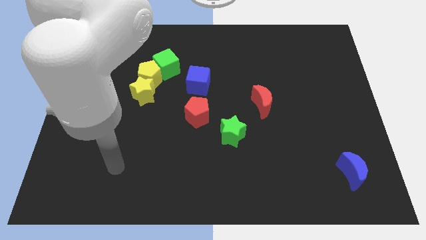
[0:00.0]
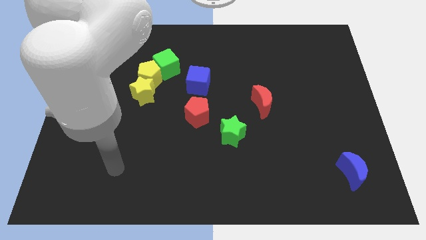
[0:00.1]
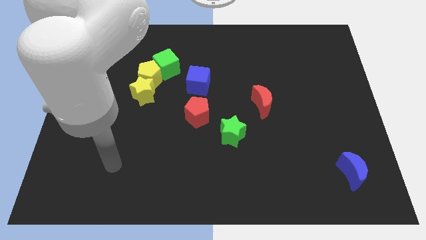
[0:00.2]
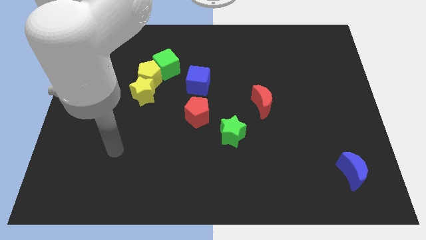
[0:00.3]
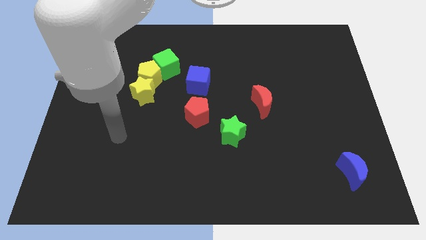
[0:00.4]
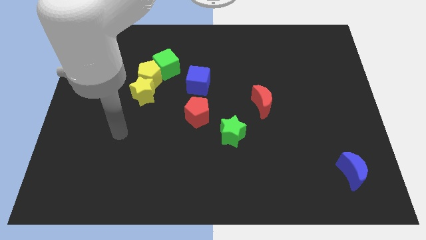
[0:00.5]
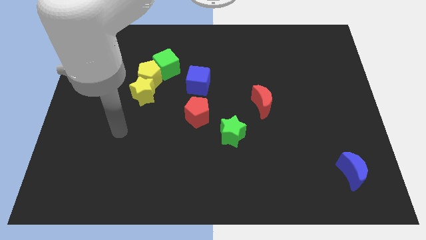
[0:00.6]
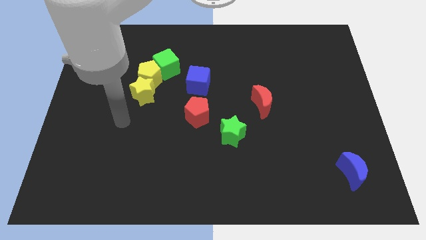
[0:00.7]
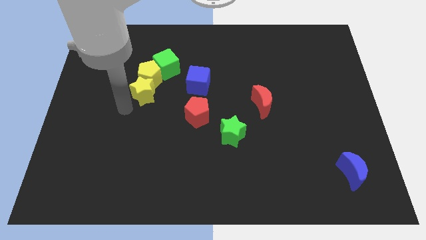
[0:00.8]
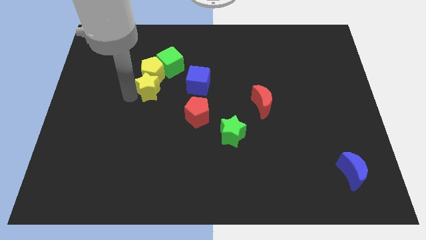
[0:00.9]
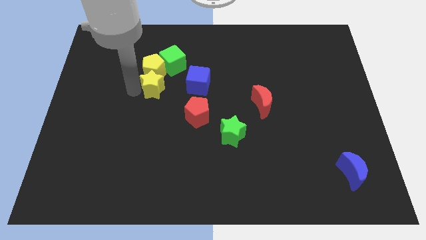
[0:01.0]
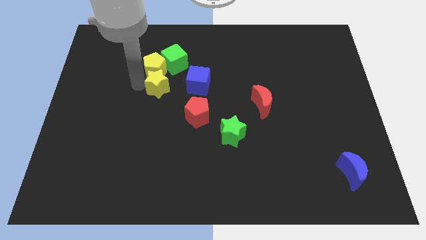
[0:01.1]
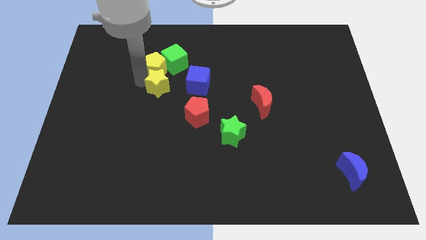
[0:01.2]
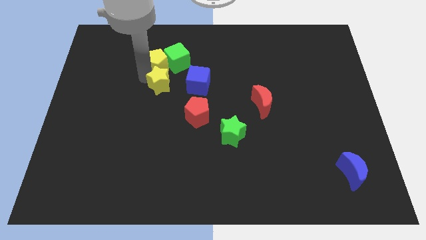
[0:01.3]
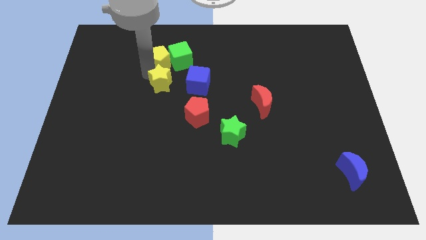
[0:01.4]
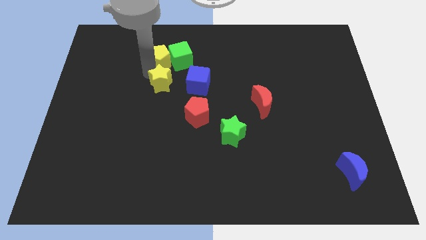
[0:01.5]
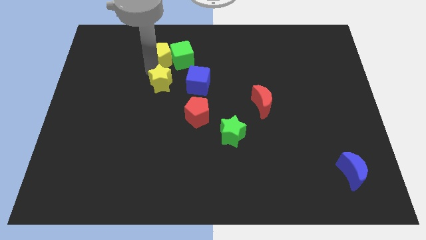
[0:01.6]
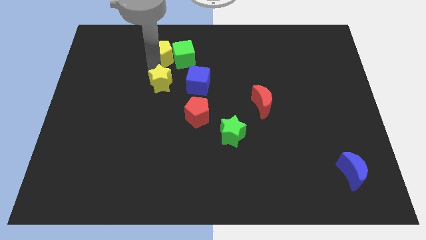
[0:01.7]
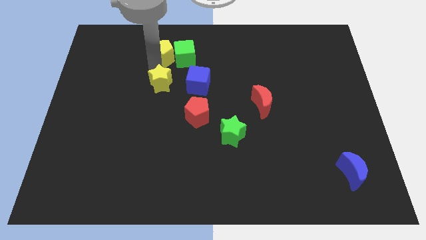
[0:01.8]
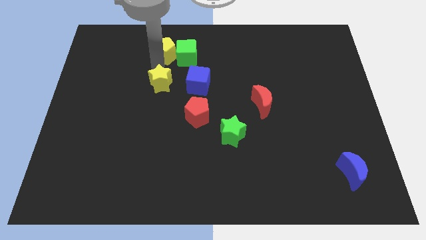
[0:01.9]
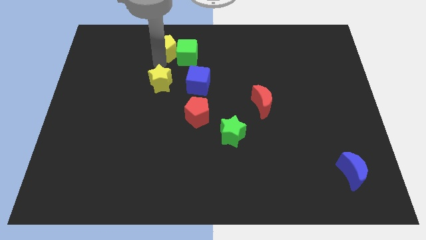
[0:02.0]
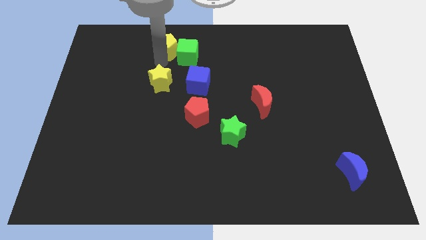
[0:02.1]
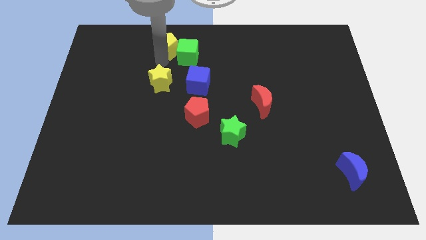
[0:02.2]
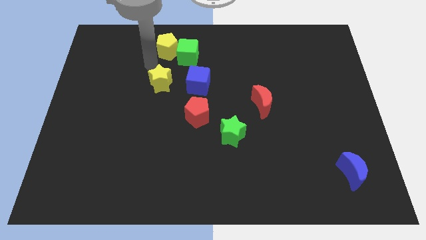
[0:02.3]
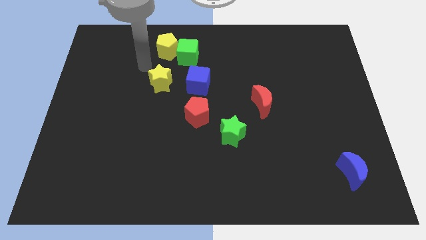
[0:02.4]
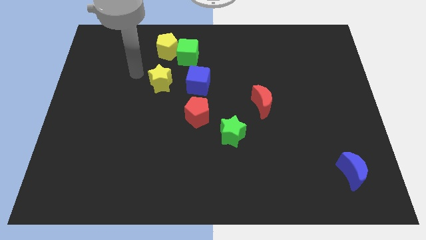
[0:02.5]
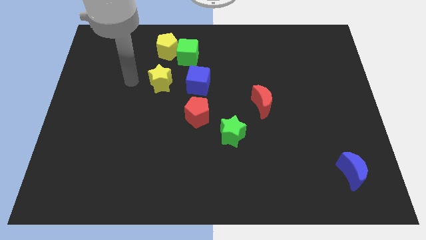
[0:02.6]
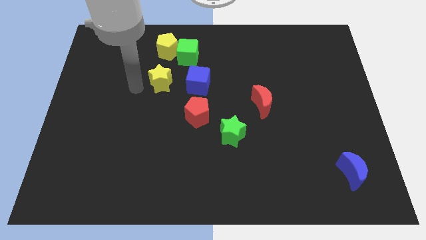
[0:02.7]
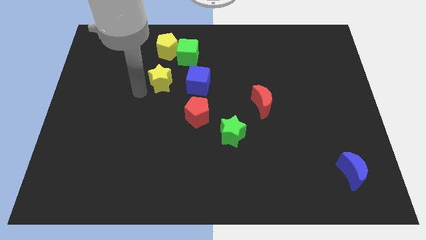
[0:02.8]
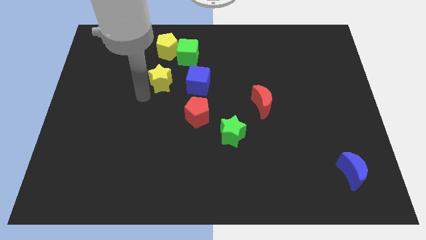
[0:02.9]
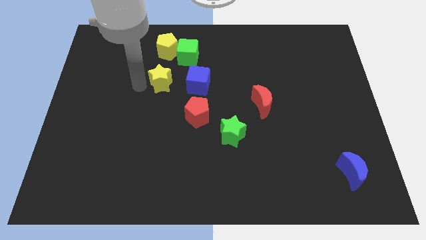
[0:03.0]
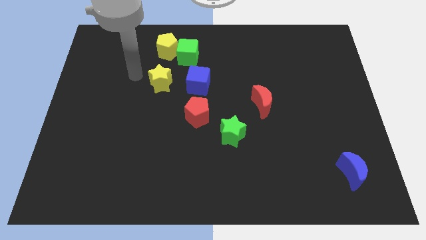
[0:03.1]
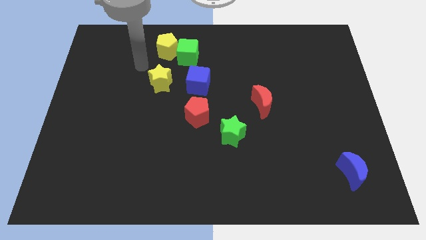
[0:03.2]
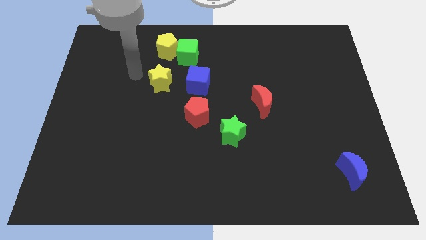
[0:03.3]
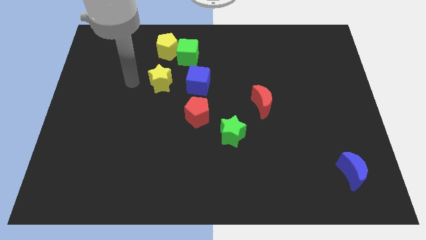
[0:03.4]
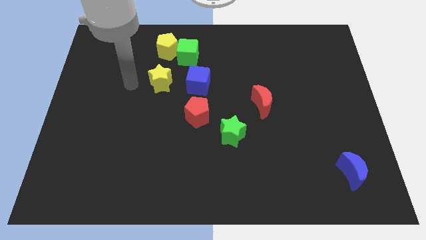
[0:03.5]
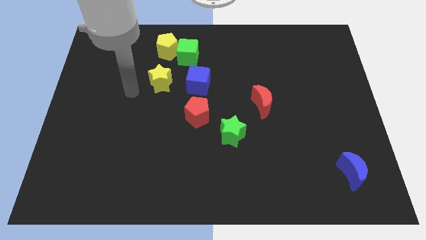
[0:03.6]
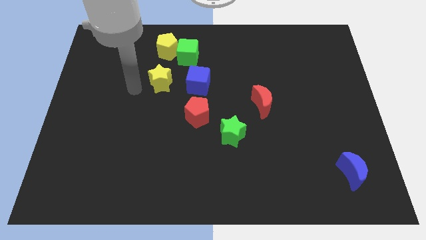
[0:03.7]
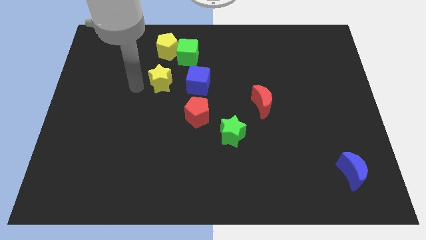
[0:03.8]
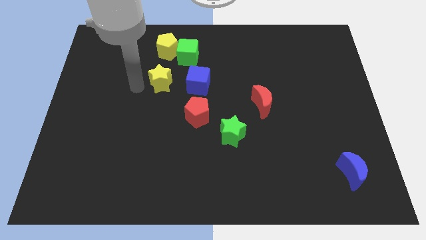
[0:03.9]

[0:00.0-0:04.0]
separate the yellow pentagon and green cube from the yellow star

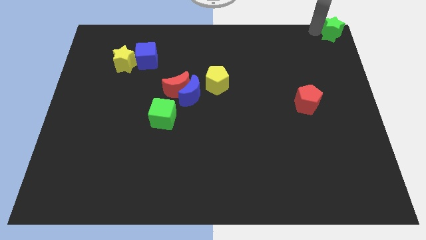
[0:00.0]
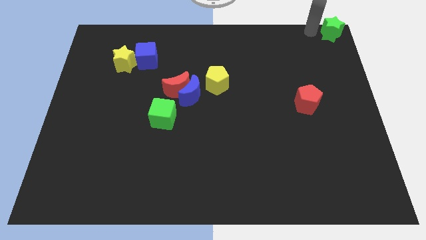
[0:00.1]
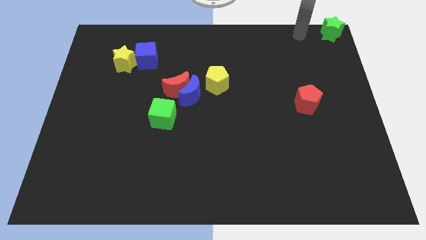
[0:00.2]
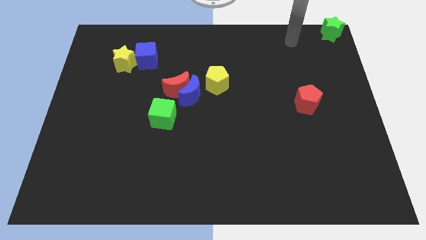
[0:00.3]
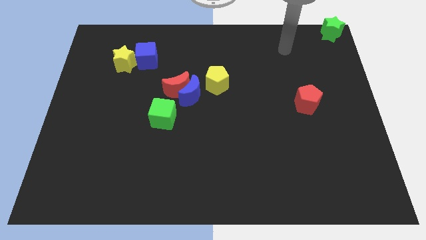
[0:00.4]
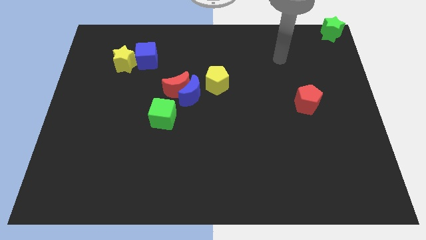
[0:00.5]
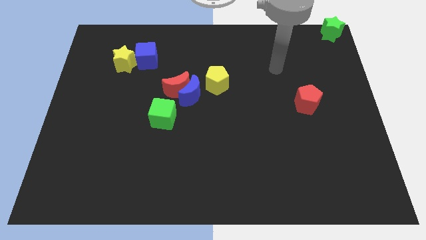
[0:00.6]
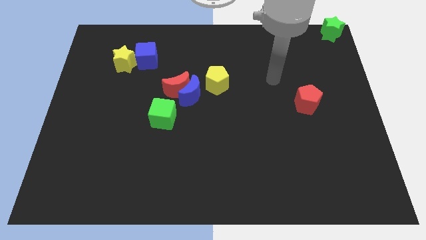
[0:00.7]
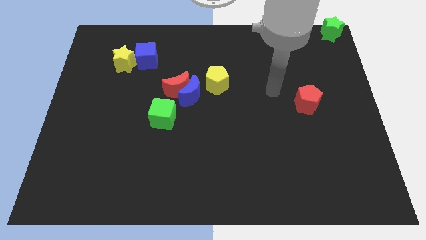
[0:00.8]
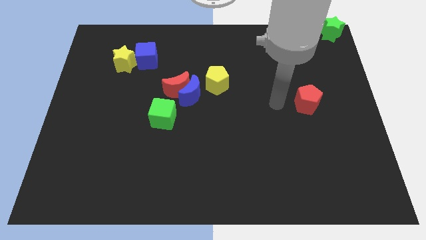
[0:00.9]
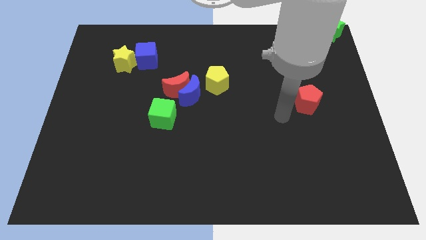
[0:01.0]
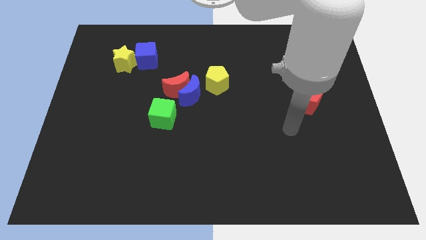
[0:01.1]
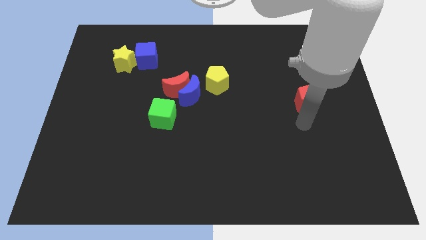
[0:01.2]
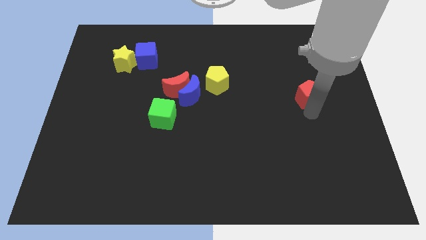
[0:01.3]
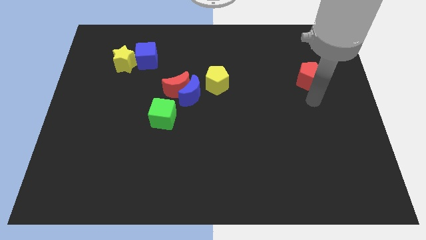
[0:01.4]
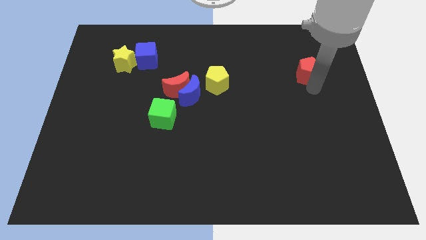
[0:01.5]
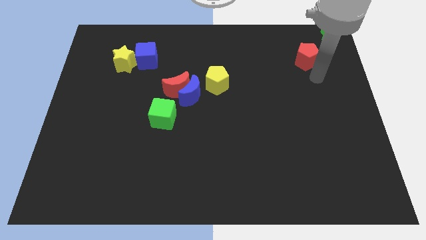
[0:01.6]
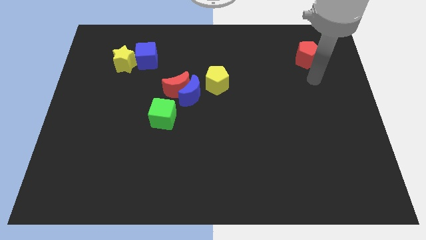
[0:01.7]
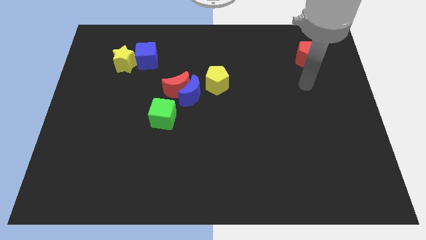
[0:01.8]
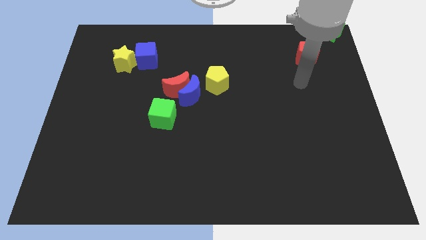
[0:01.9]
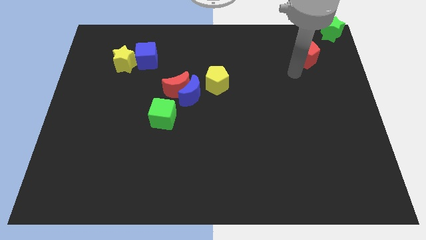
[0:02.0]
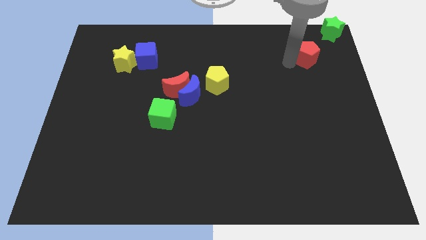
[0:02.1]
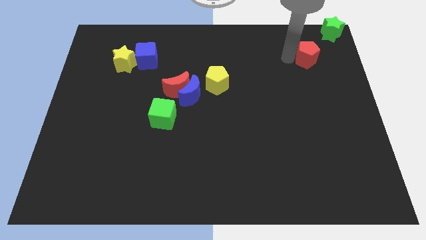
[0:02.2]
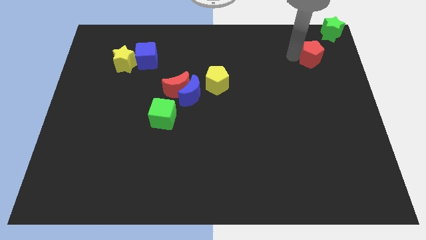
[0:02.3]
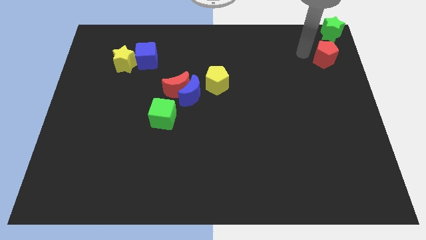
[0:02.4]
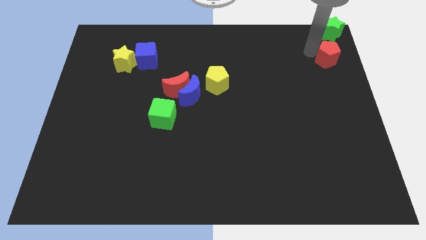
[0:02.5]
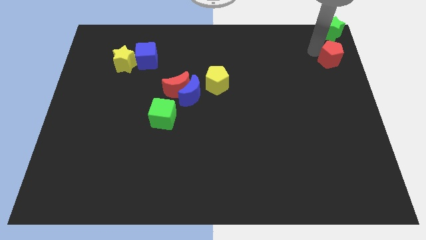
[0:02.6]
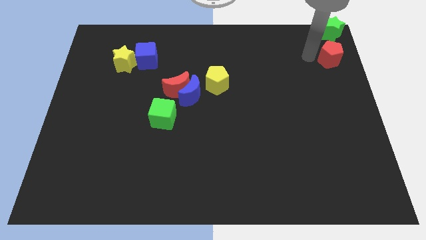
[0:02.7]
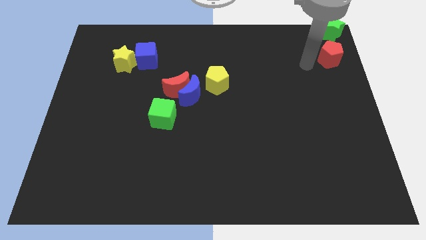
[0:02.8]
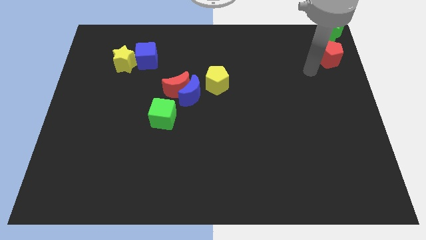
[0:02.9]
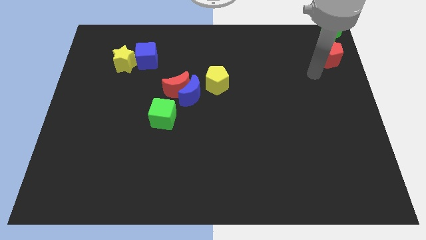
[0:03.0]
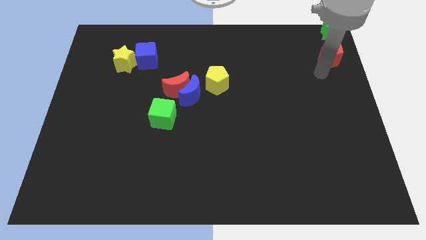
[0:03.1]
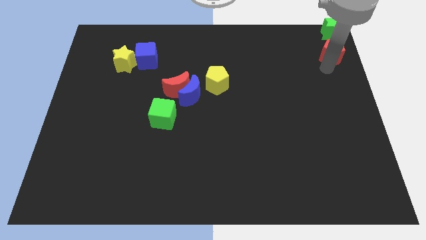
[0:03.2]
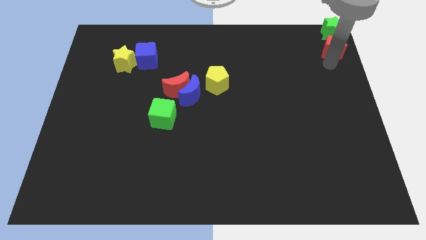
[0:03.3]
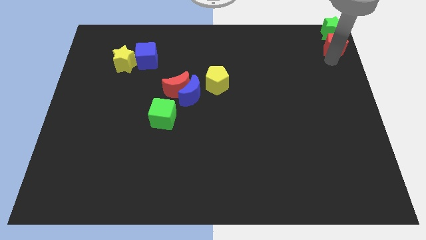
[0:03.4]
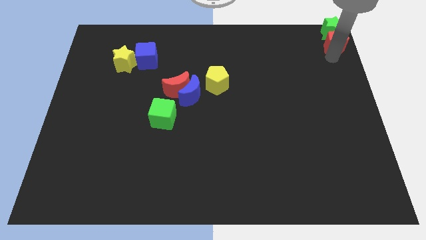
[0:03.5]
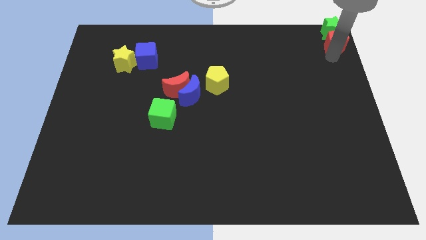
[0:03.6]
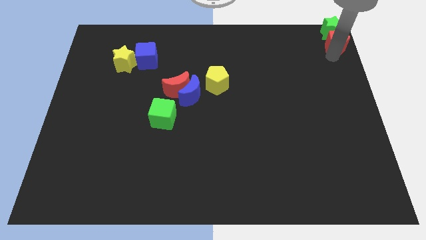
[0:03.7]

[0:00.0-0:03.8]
push the red pentagon towards the green star

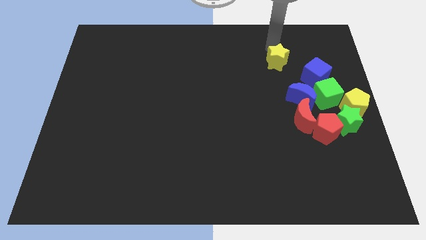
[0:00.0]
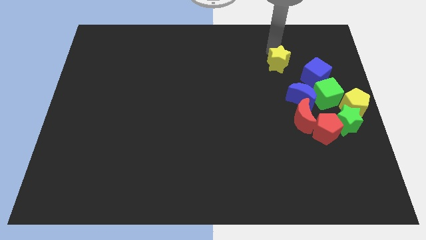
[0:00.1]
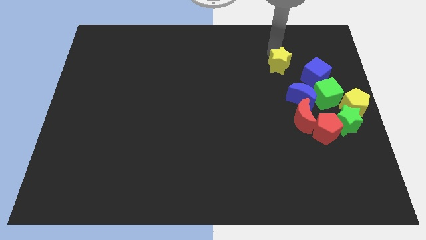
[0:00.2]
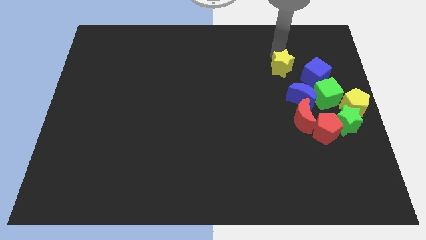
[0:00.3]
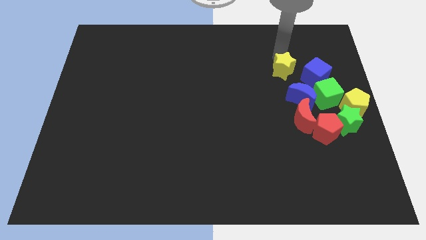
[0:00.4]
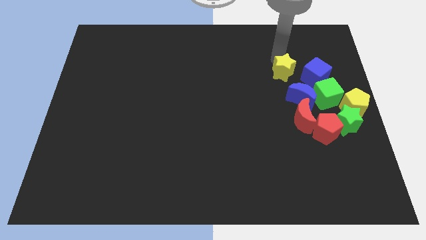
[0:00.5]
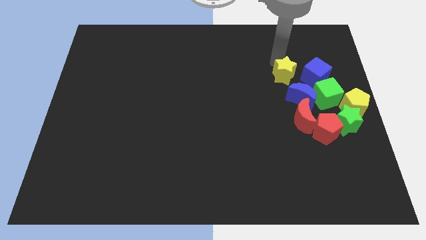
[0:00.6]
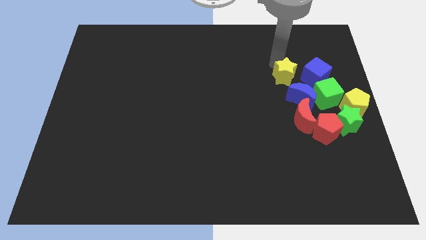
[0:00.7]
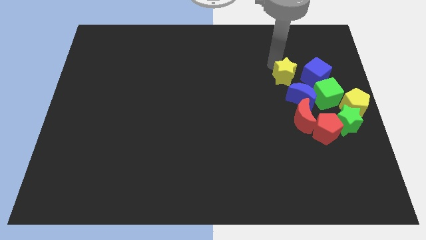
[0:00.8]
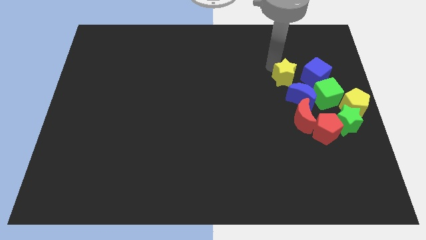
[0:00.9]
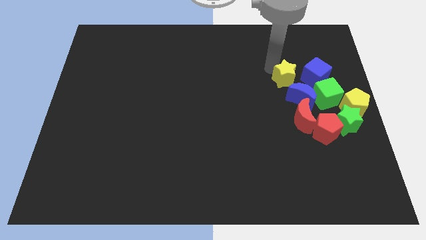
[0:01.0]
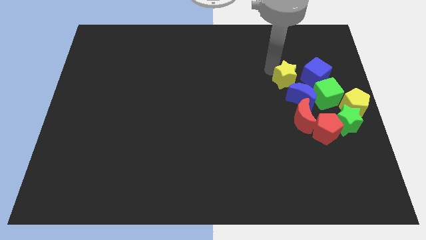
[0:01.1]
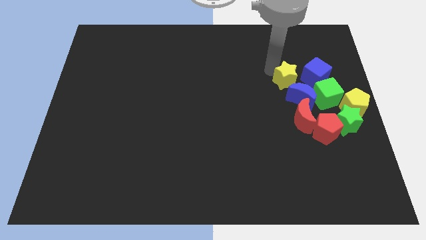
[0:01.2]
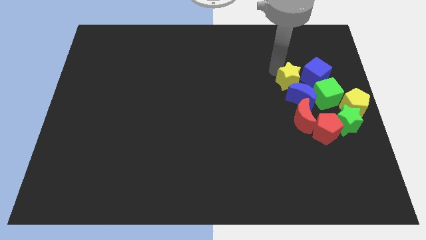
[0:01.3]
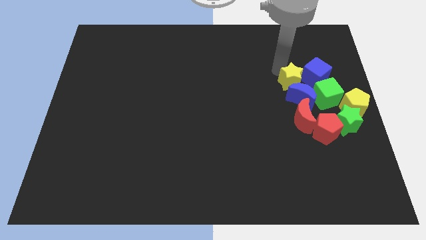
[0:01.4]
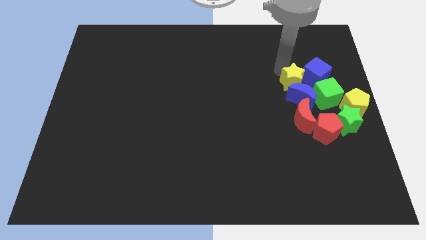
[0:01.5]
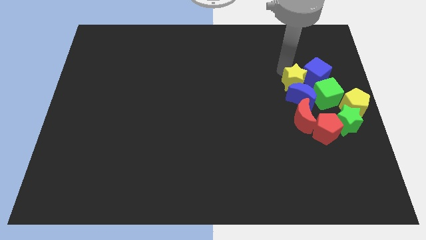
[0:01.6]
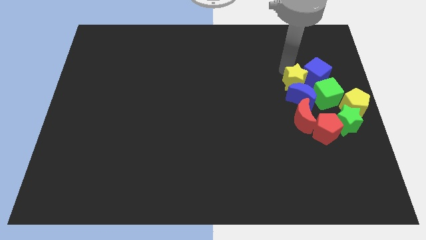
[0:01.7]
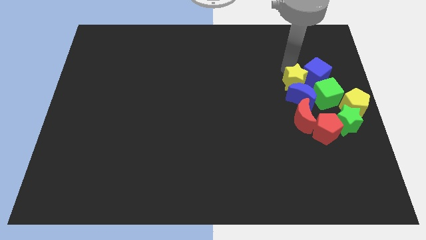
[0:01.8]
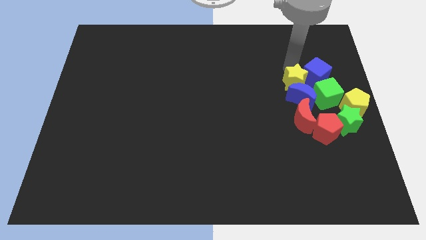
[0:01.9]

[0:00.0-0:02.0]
push the yellow star towards the top of the blue crescent
